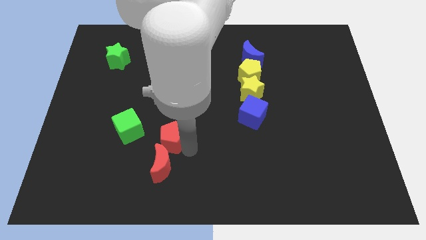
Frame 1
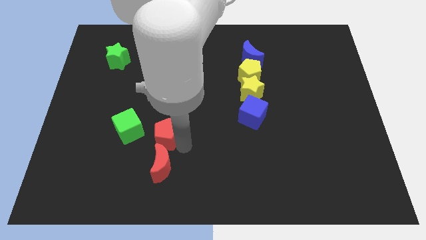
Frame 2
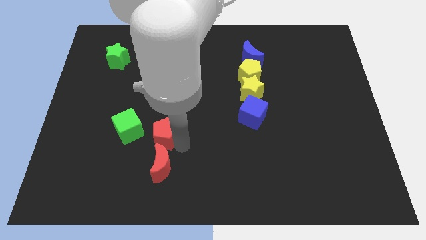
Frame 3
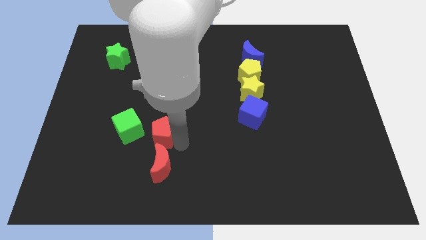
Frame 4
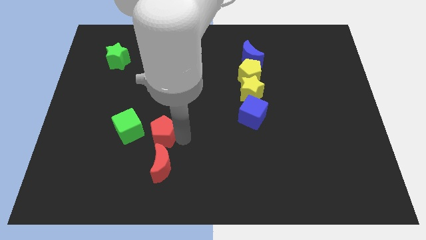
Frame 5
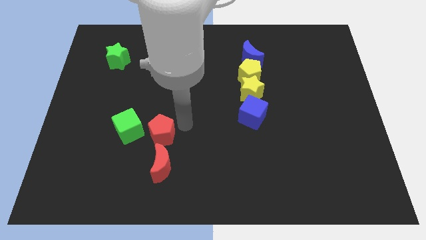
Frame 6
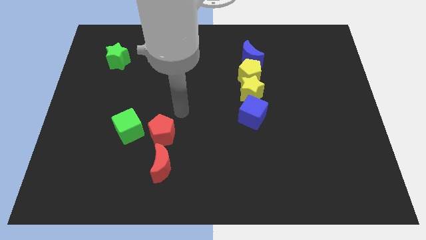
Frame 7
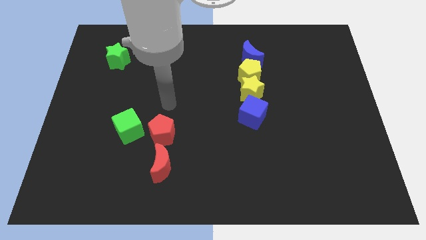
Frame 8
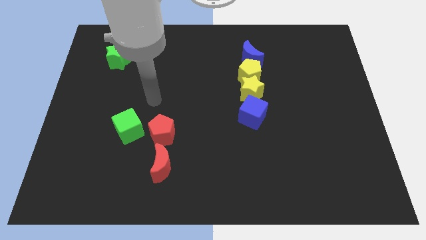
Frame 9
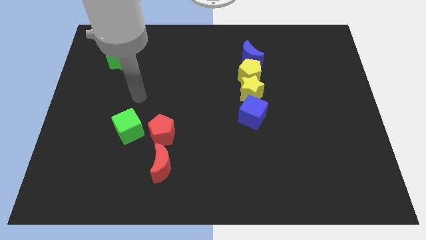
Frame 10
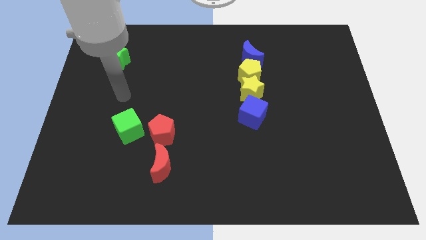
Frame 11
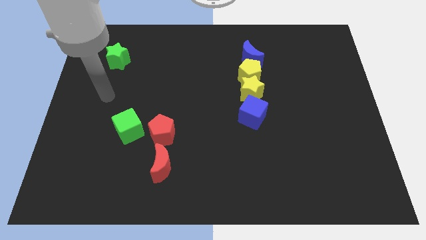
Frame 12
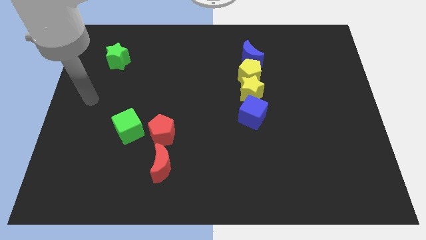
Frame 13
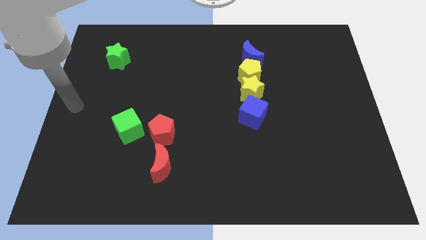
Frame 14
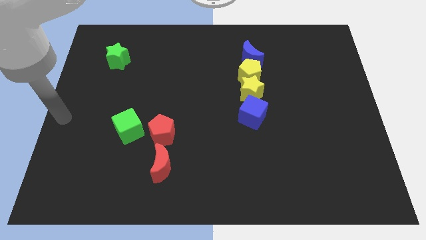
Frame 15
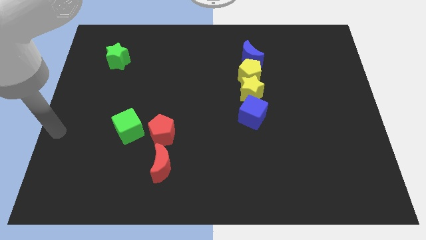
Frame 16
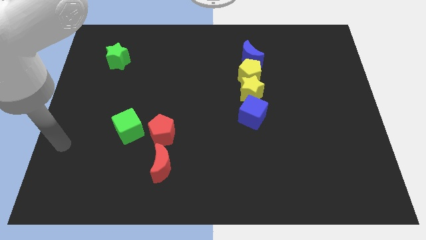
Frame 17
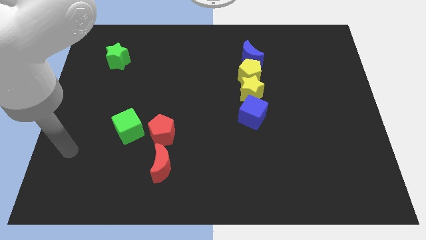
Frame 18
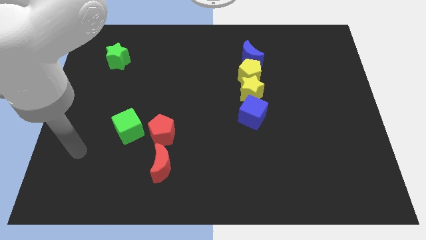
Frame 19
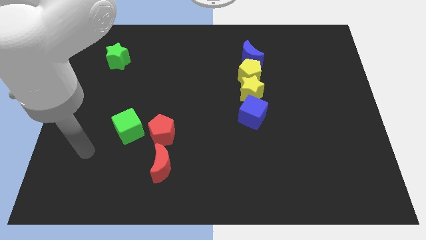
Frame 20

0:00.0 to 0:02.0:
place the red pentagon to the right of the green cube

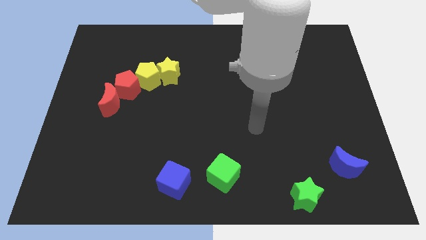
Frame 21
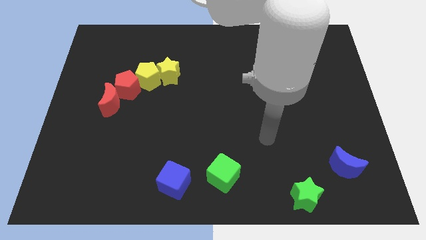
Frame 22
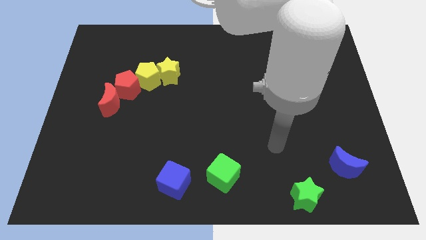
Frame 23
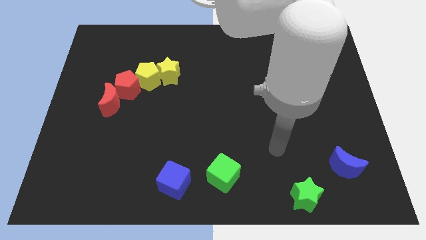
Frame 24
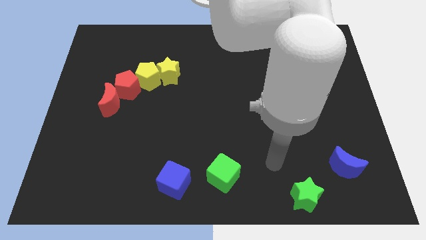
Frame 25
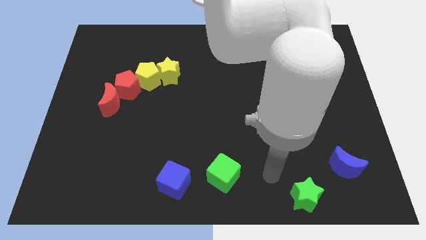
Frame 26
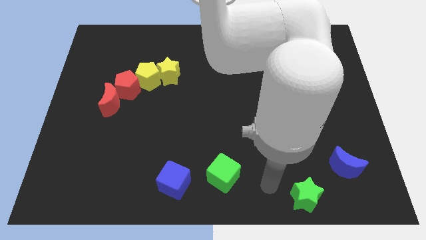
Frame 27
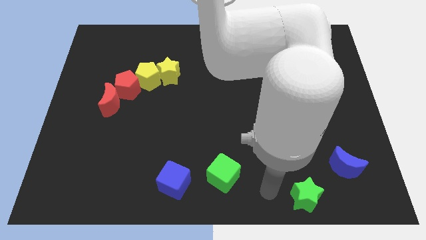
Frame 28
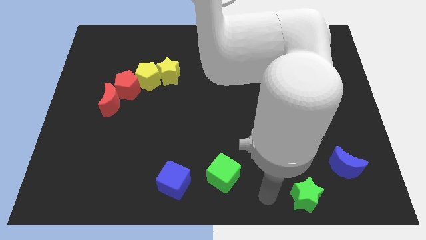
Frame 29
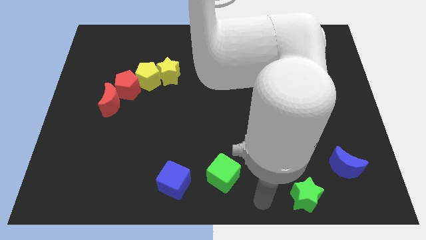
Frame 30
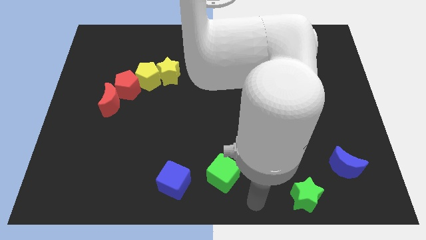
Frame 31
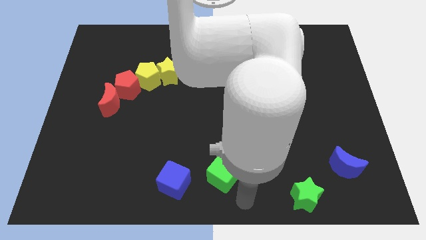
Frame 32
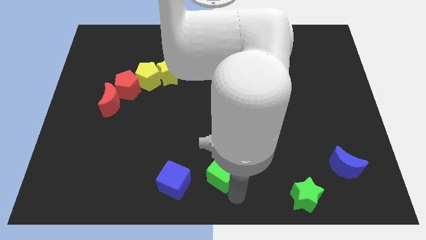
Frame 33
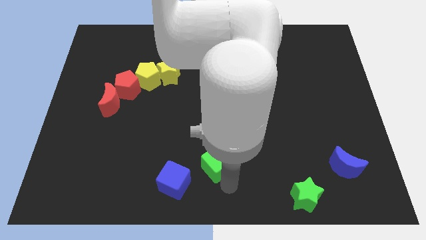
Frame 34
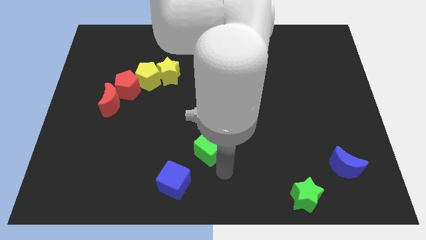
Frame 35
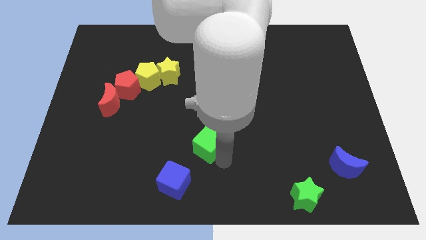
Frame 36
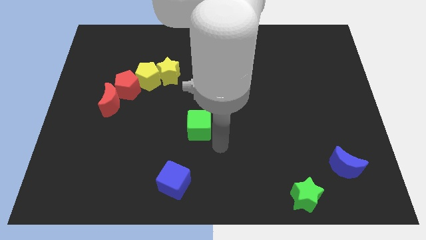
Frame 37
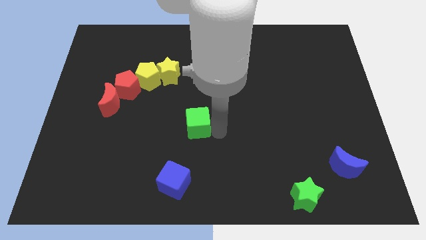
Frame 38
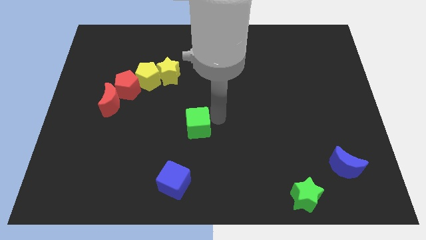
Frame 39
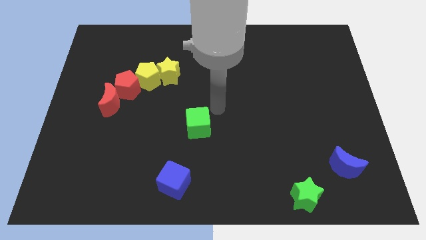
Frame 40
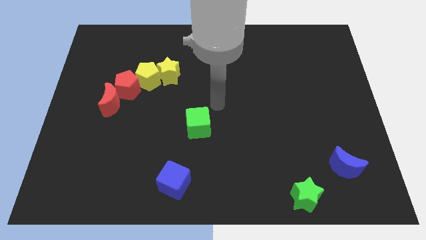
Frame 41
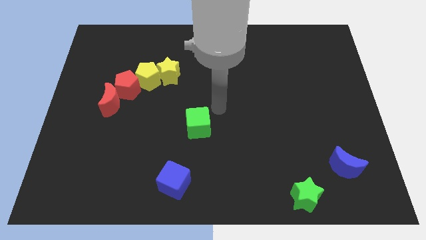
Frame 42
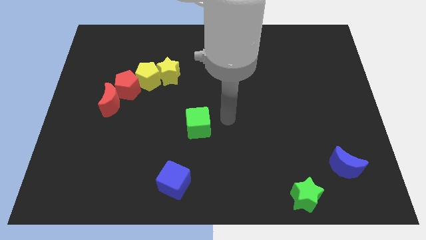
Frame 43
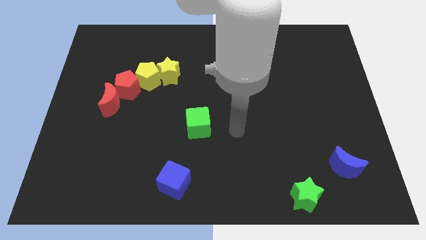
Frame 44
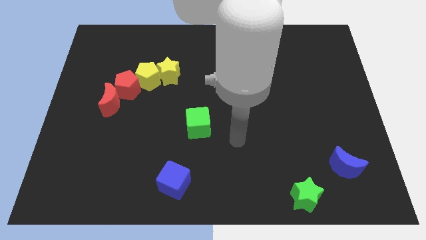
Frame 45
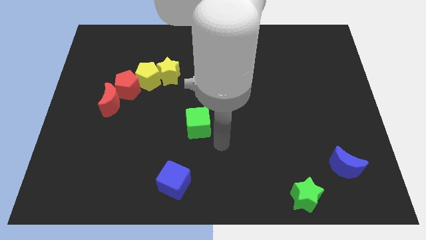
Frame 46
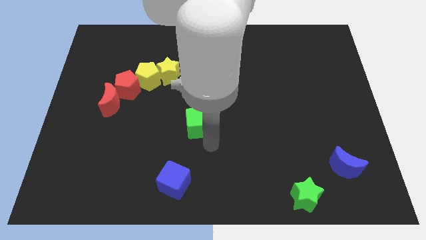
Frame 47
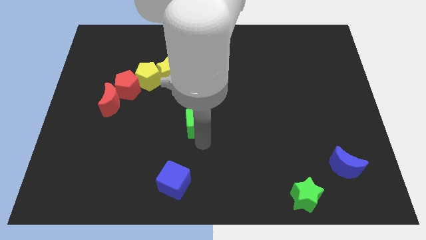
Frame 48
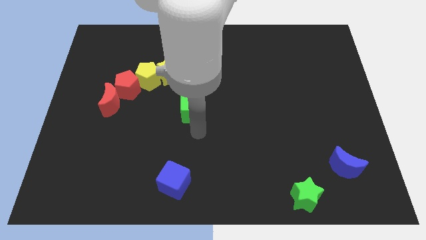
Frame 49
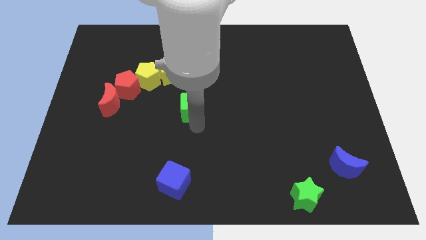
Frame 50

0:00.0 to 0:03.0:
move the green cube towards the center of the board

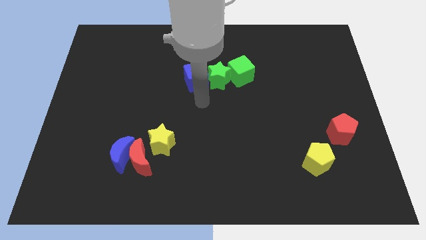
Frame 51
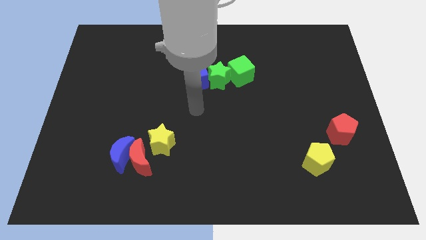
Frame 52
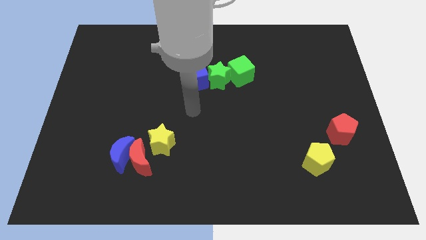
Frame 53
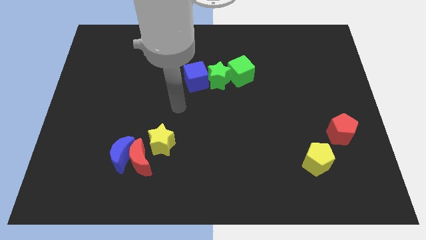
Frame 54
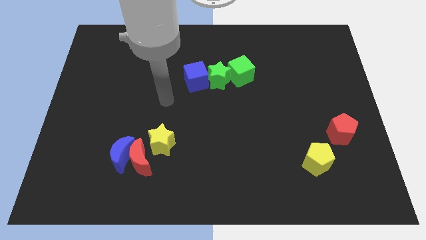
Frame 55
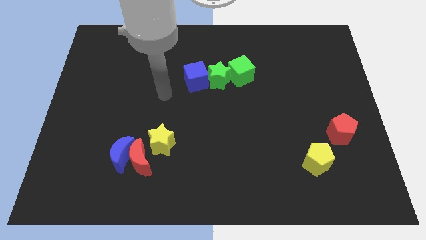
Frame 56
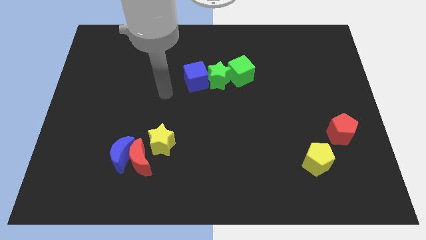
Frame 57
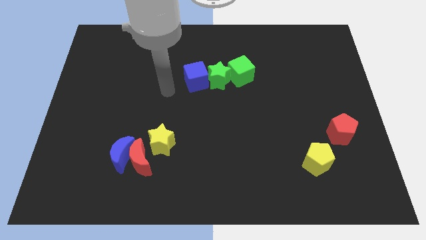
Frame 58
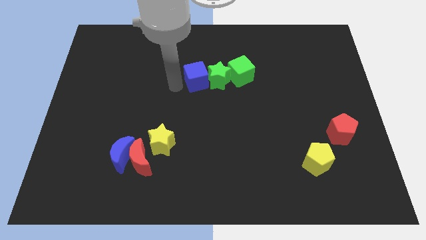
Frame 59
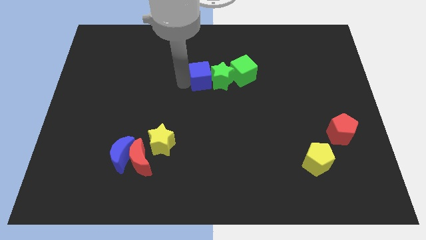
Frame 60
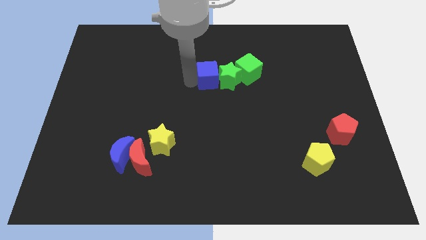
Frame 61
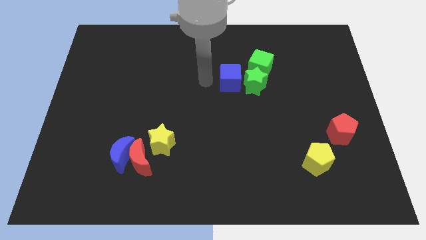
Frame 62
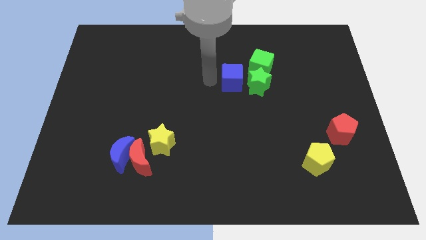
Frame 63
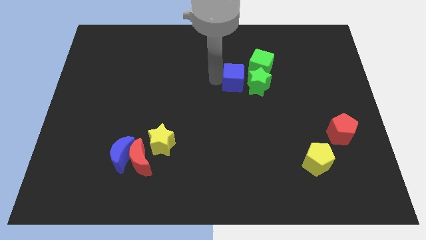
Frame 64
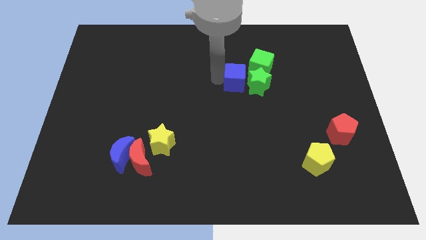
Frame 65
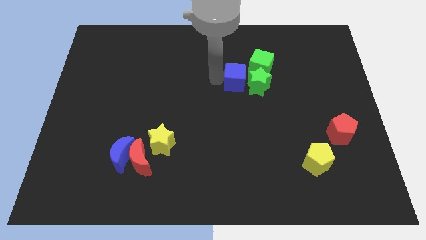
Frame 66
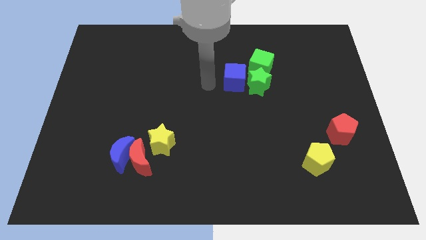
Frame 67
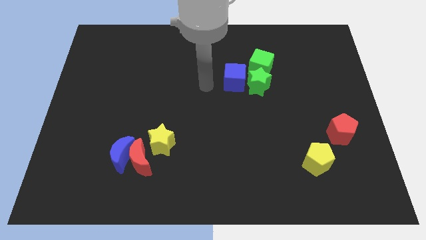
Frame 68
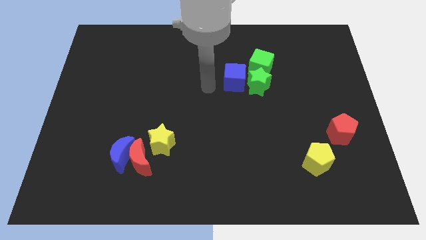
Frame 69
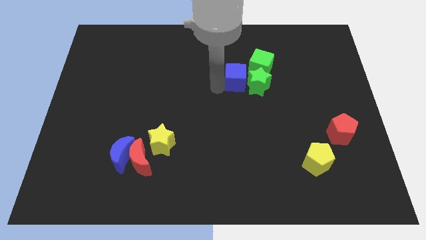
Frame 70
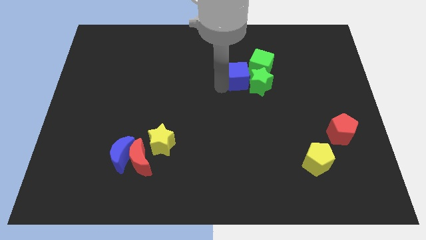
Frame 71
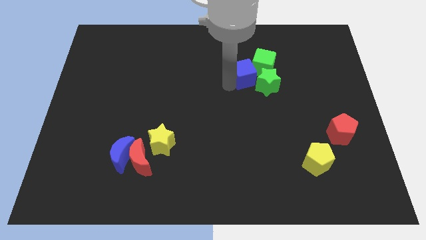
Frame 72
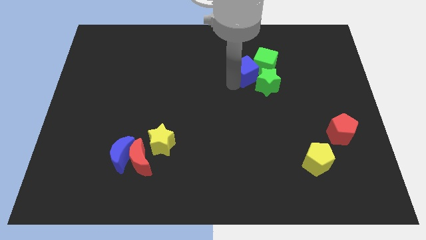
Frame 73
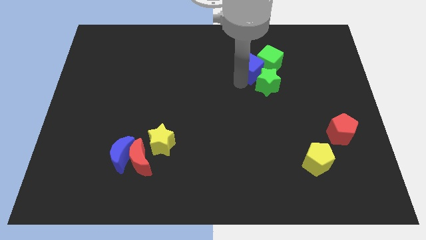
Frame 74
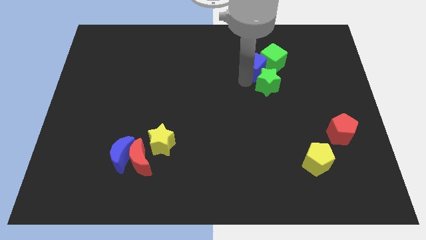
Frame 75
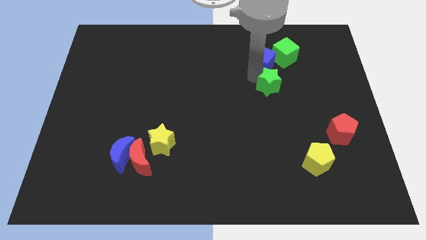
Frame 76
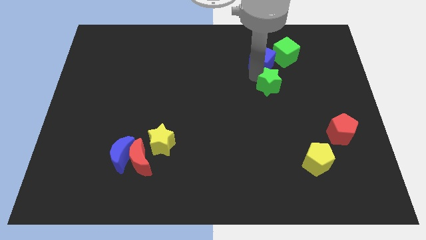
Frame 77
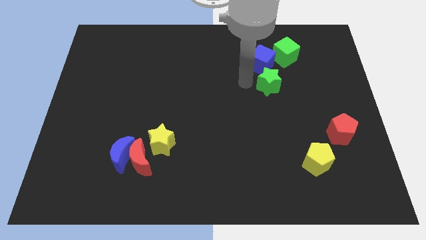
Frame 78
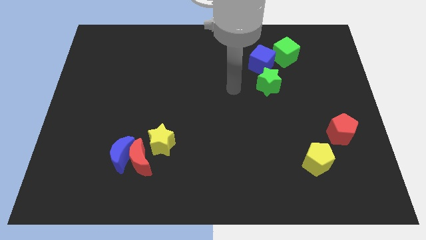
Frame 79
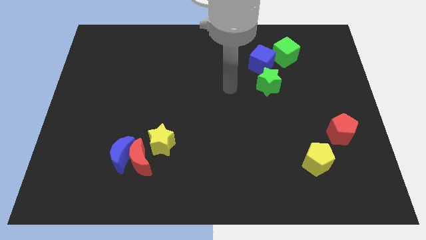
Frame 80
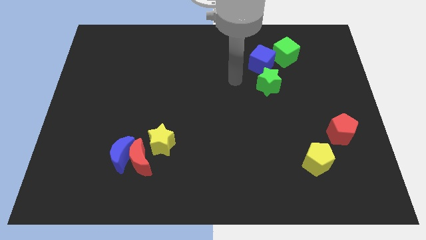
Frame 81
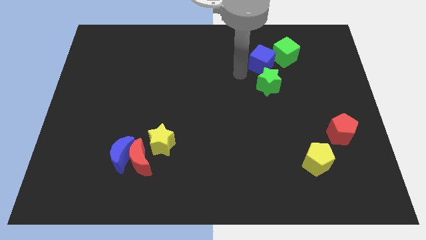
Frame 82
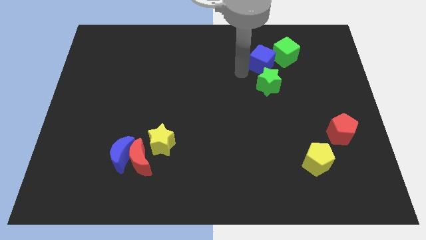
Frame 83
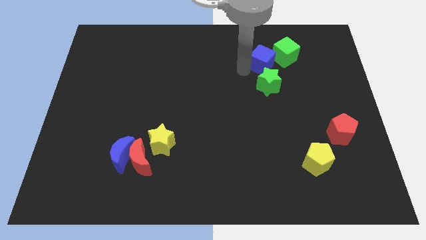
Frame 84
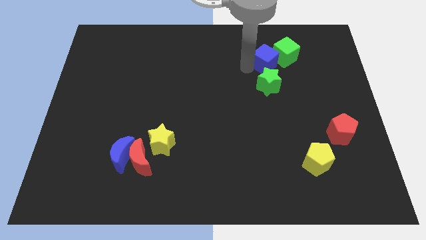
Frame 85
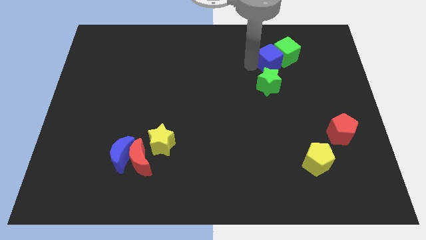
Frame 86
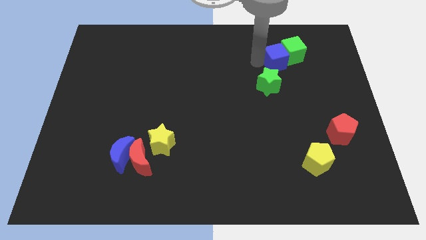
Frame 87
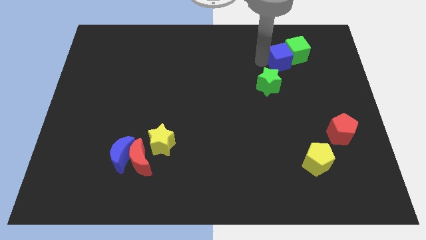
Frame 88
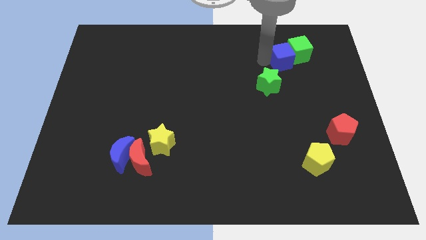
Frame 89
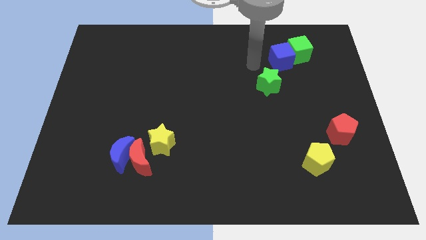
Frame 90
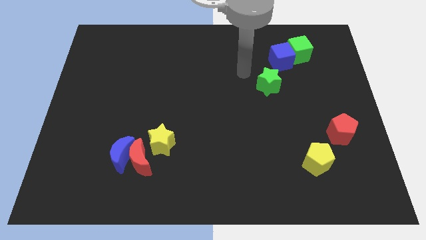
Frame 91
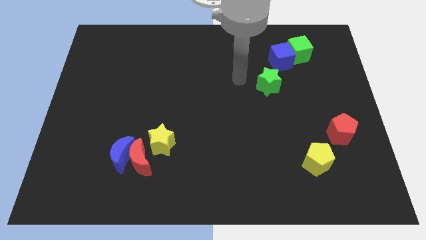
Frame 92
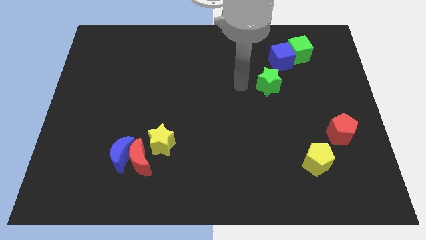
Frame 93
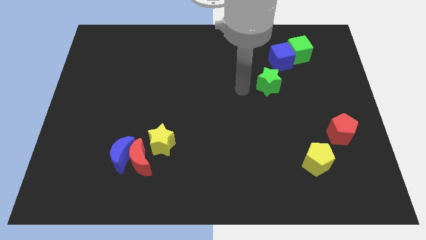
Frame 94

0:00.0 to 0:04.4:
drag both green cube and blue cube towards the top right corner
